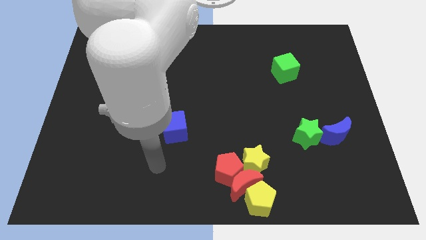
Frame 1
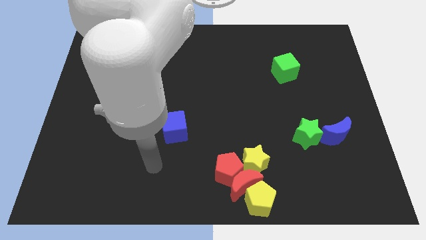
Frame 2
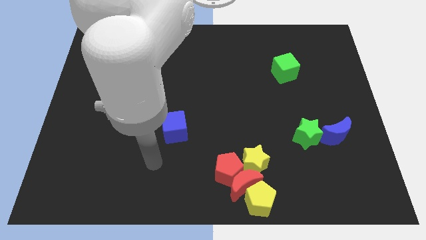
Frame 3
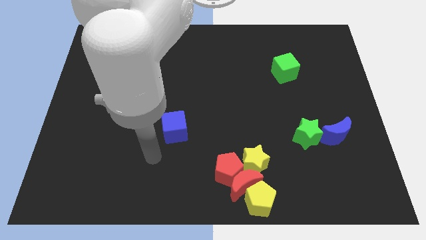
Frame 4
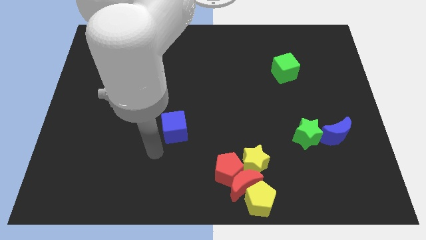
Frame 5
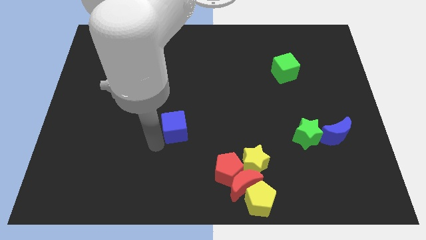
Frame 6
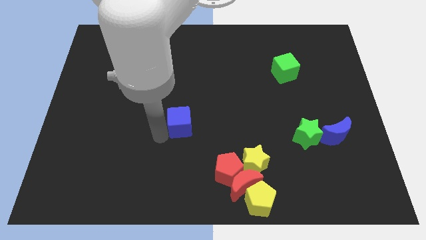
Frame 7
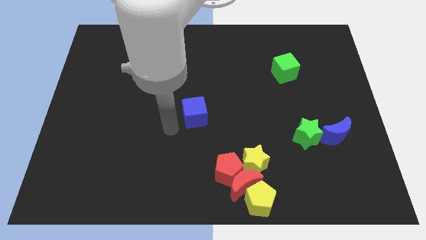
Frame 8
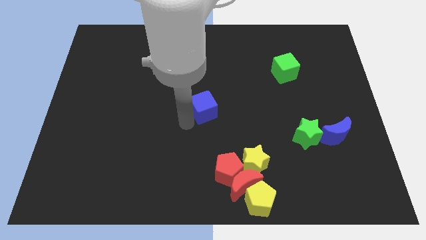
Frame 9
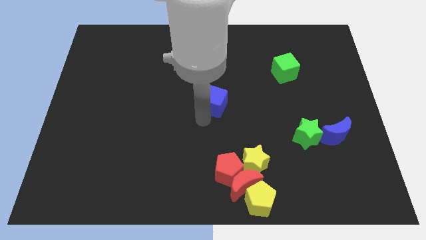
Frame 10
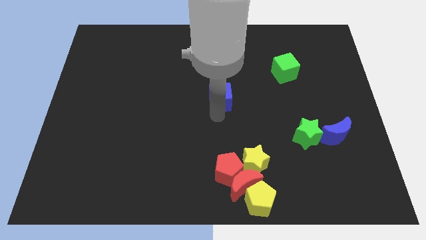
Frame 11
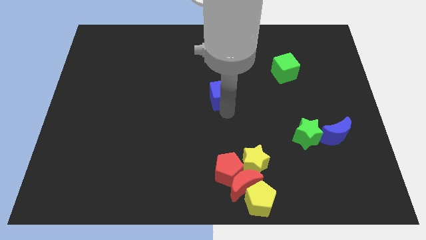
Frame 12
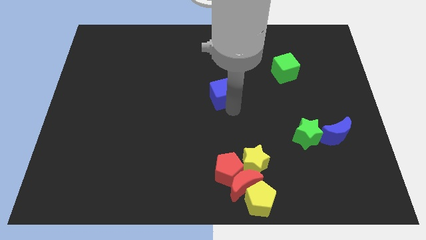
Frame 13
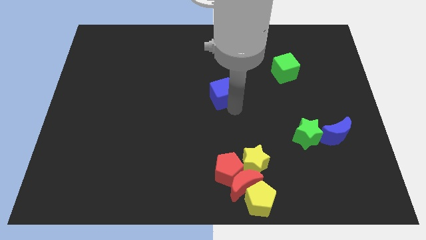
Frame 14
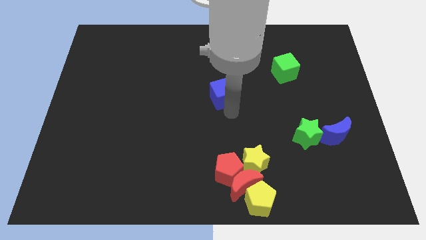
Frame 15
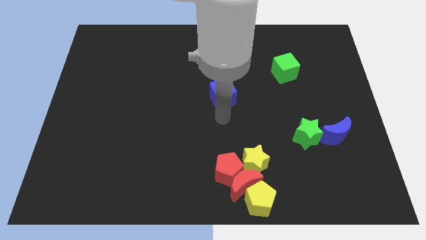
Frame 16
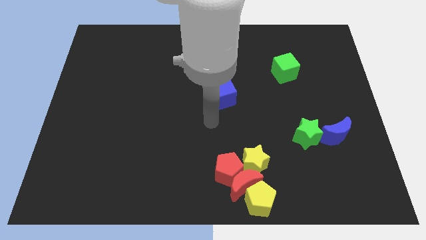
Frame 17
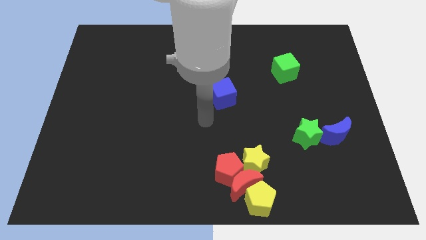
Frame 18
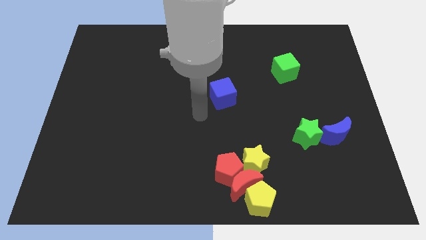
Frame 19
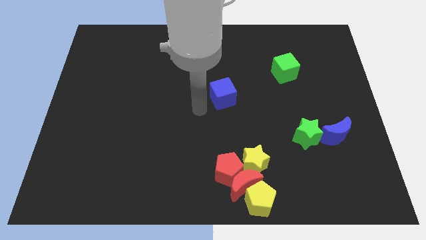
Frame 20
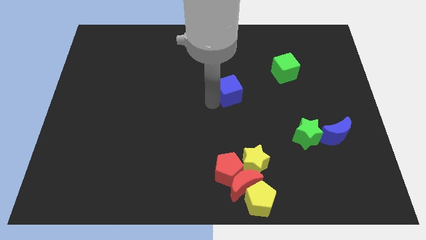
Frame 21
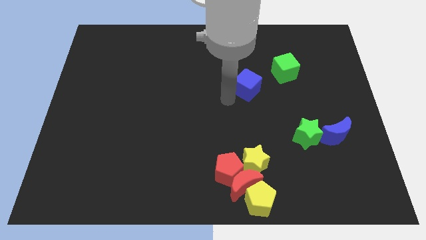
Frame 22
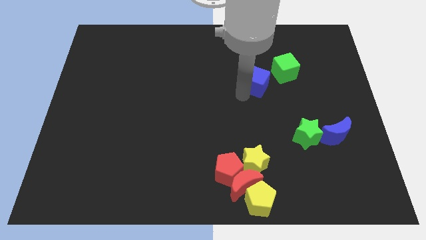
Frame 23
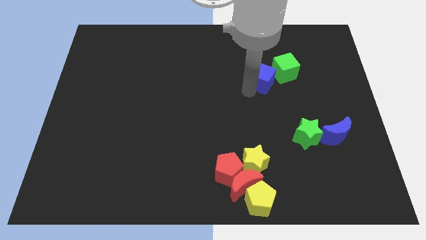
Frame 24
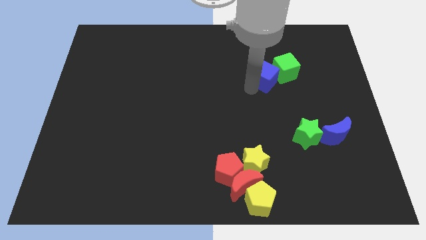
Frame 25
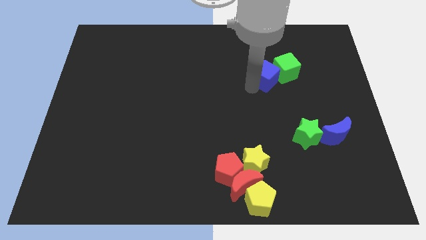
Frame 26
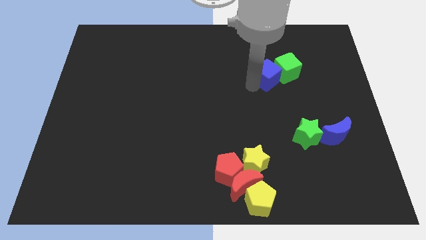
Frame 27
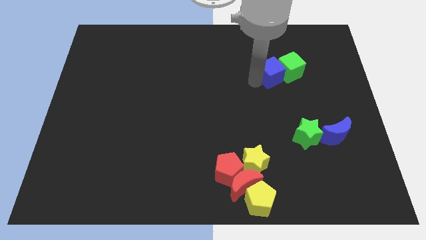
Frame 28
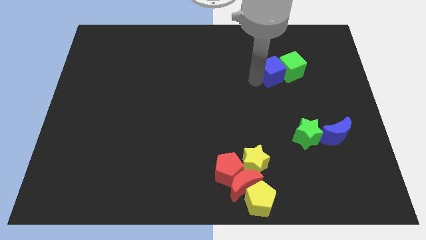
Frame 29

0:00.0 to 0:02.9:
put the blue cube into the green cube

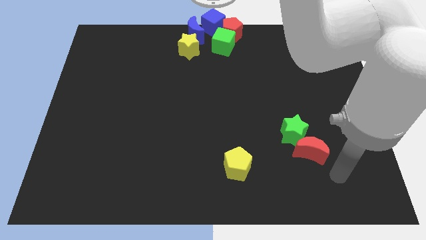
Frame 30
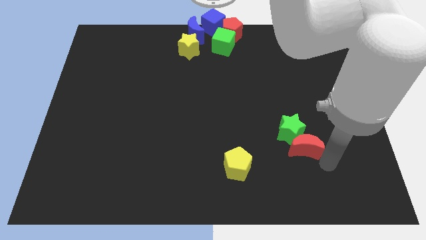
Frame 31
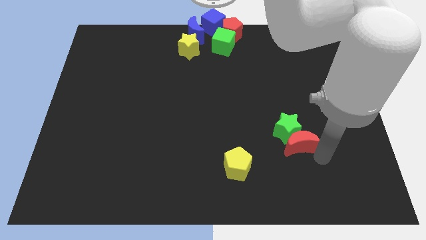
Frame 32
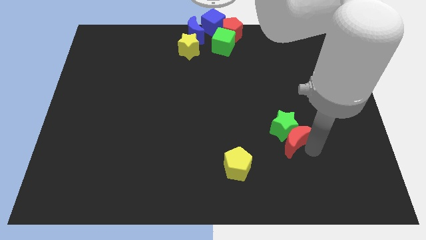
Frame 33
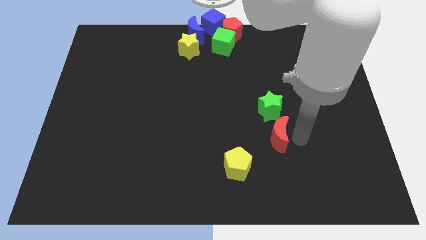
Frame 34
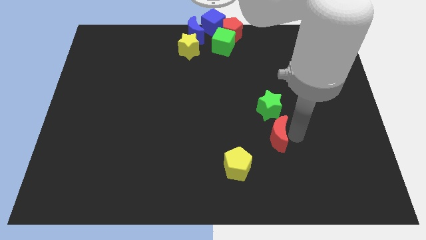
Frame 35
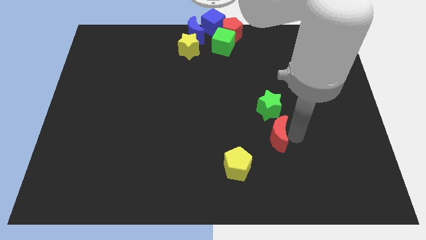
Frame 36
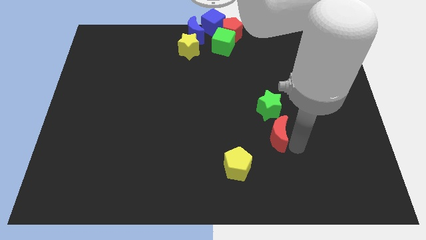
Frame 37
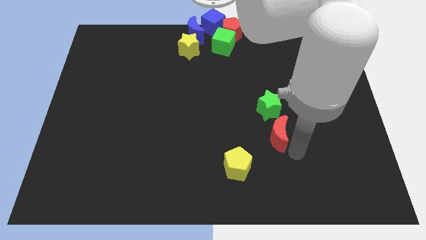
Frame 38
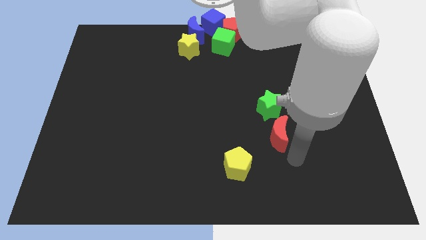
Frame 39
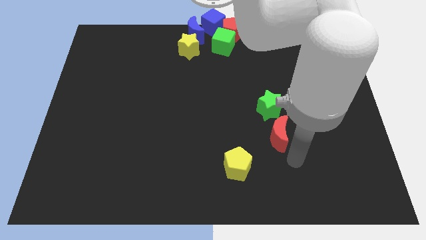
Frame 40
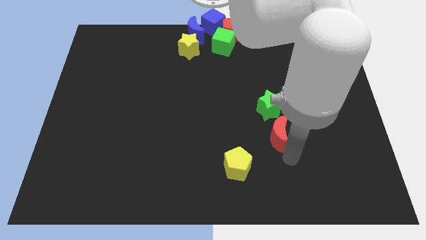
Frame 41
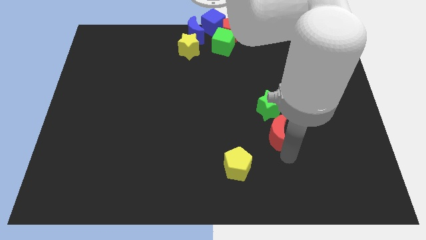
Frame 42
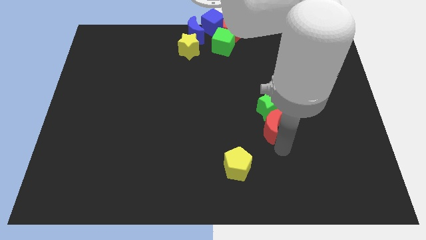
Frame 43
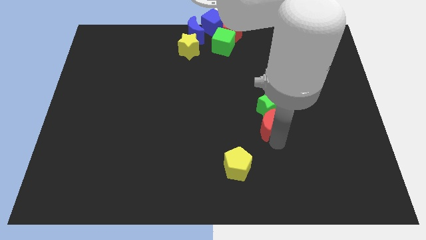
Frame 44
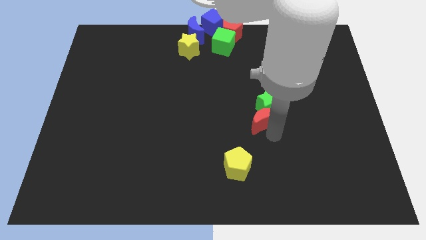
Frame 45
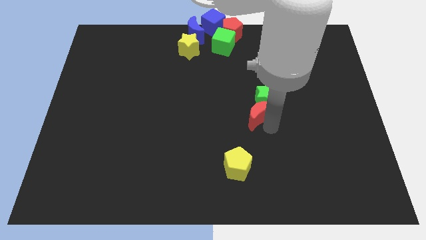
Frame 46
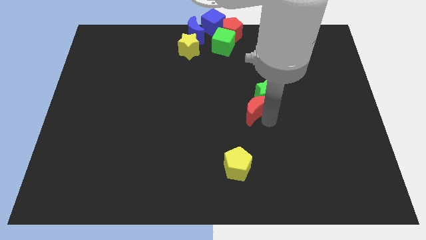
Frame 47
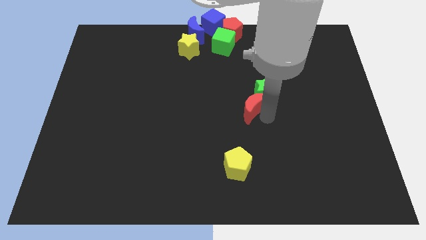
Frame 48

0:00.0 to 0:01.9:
move the red crescent and green star towards center of the board

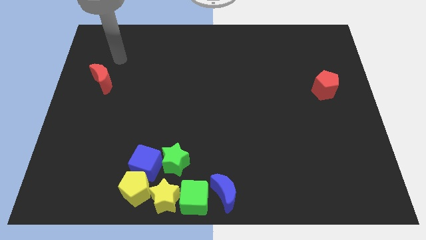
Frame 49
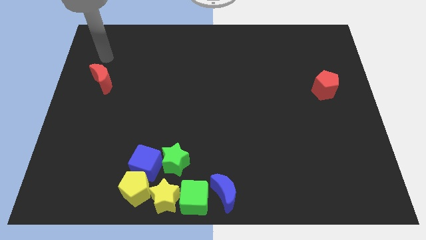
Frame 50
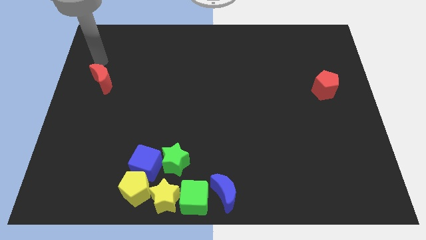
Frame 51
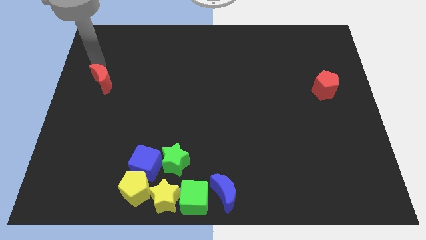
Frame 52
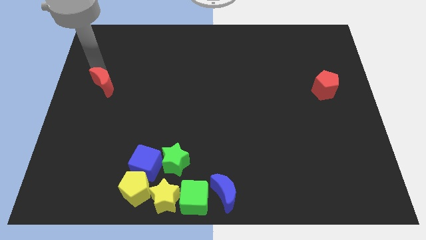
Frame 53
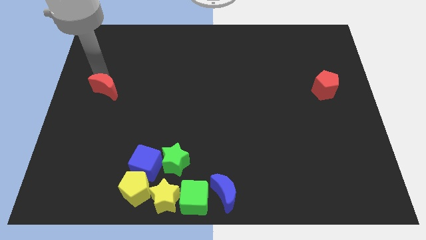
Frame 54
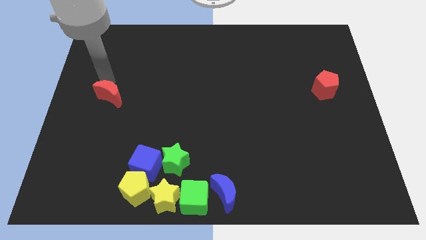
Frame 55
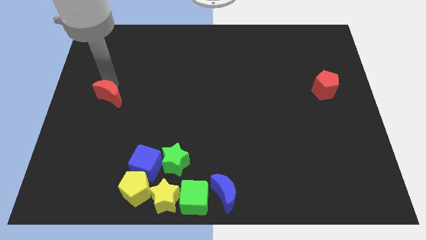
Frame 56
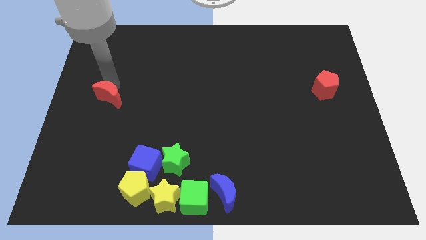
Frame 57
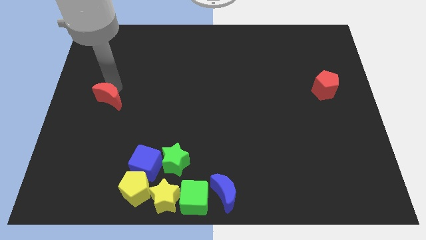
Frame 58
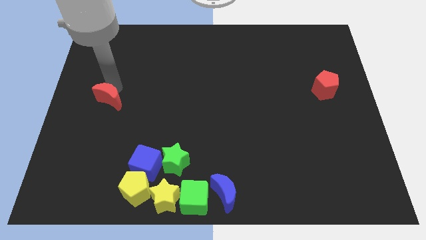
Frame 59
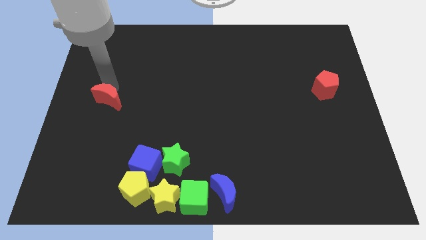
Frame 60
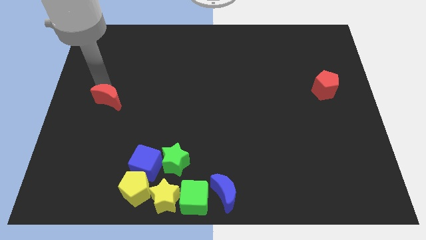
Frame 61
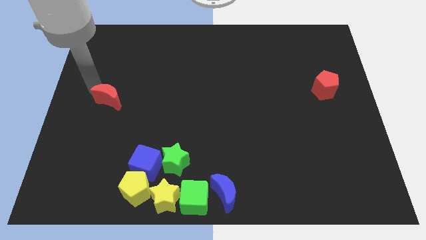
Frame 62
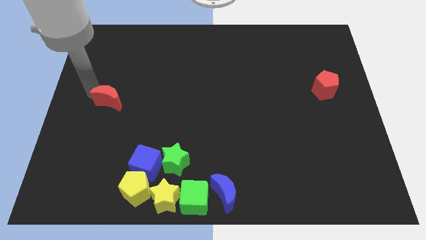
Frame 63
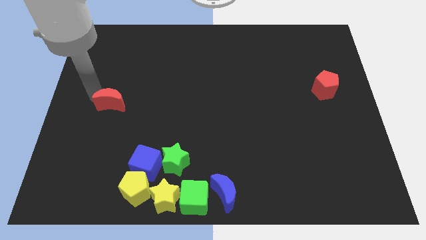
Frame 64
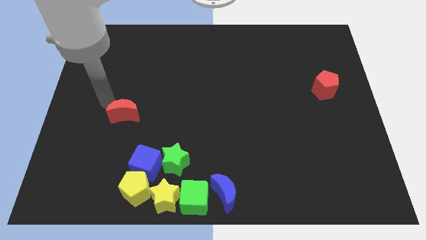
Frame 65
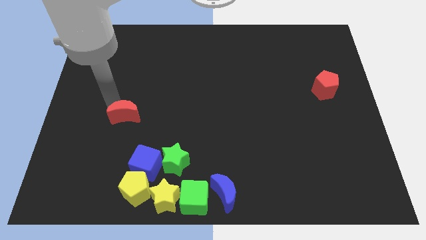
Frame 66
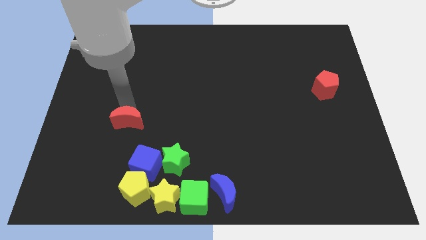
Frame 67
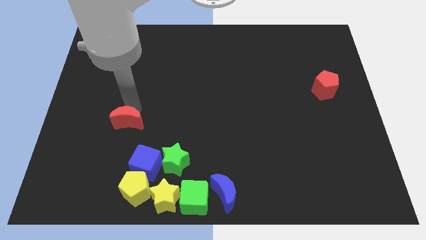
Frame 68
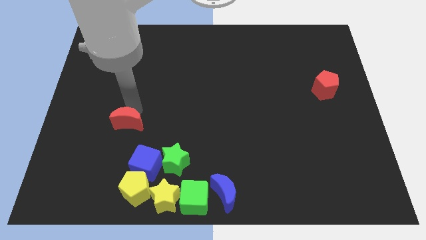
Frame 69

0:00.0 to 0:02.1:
move the red crescent diagonally on the top left side of the blue cube

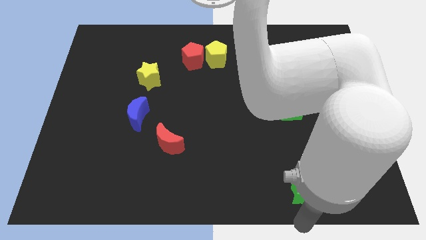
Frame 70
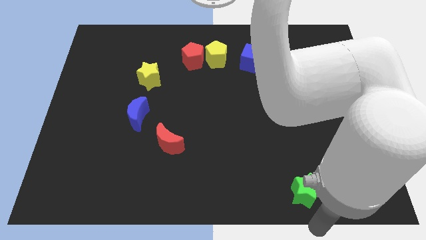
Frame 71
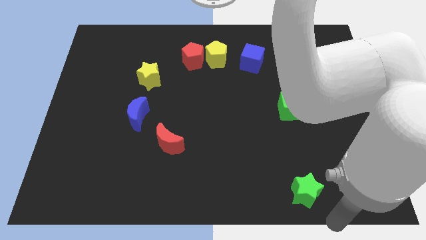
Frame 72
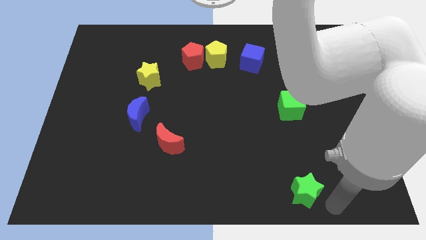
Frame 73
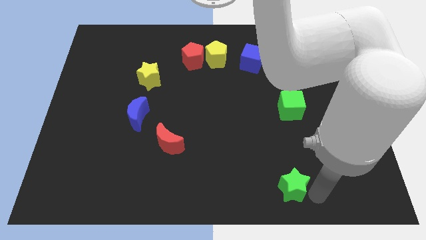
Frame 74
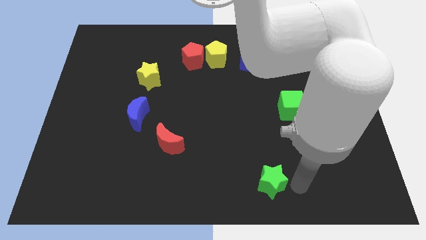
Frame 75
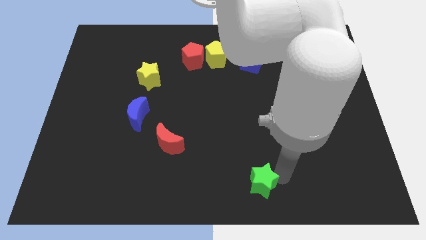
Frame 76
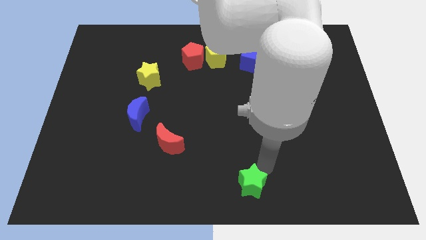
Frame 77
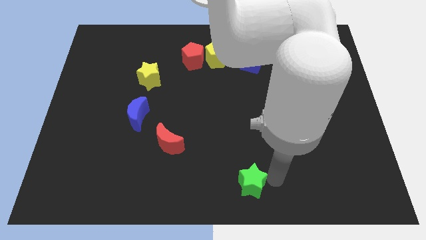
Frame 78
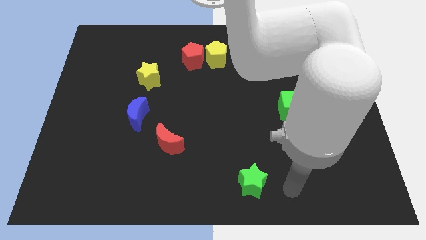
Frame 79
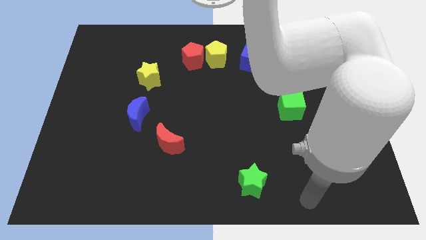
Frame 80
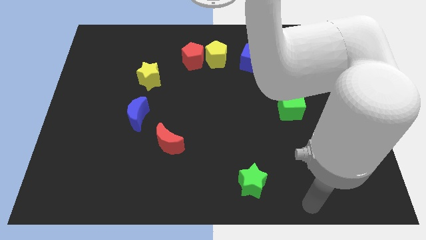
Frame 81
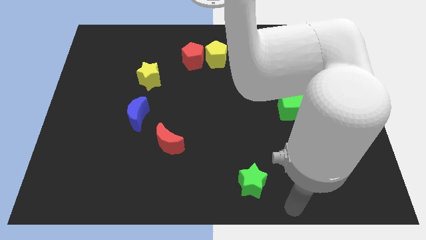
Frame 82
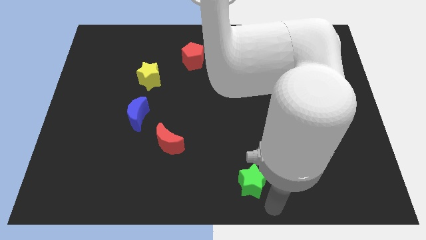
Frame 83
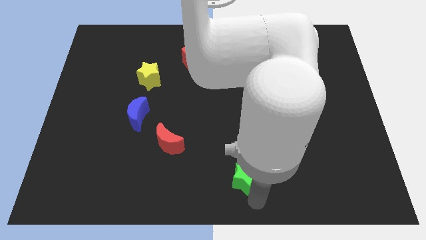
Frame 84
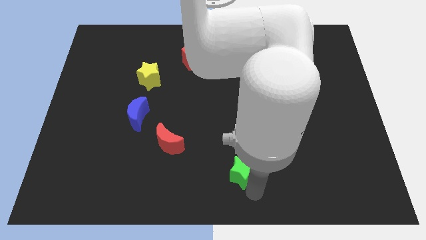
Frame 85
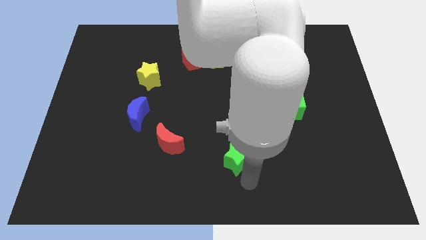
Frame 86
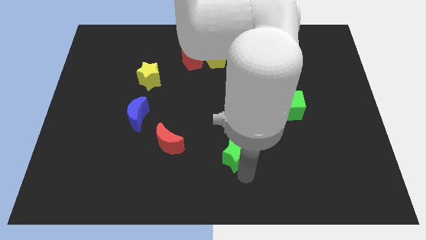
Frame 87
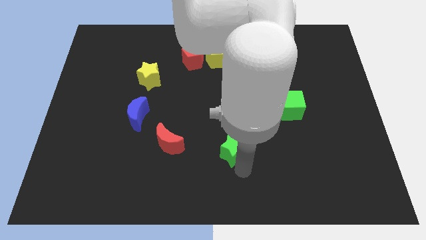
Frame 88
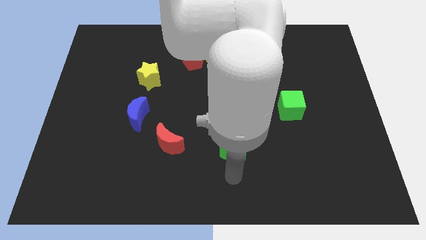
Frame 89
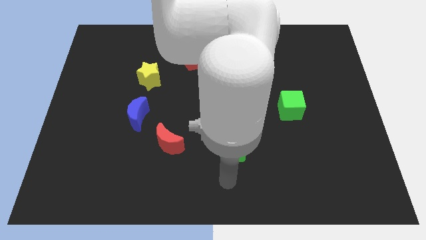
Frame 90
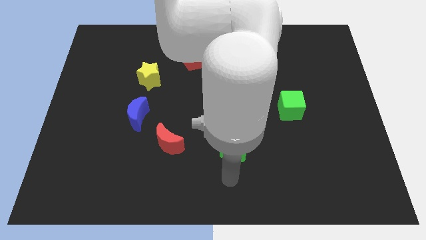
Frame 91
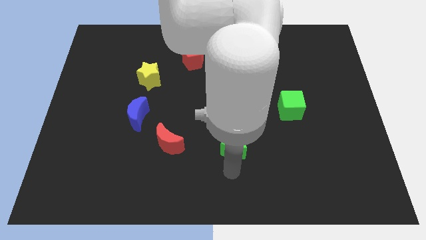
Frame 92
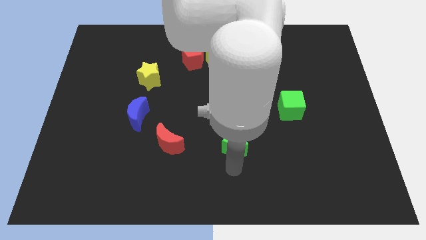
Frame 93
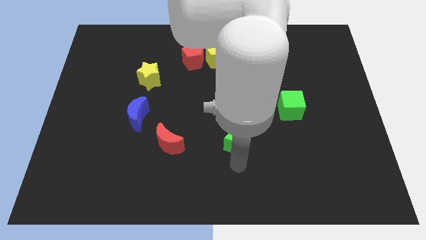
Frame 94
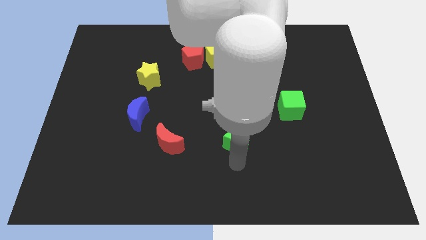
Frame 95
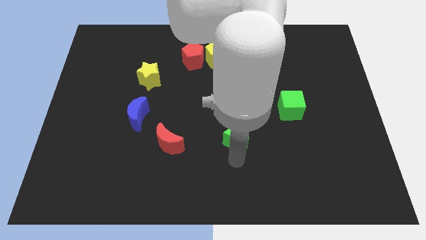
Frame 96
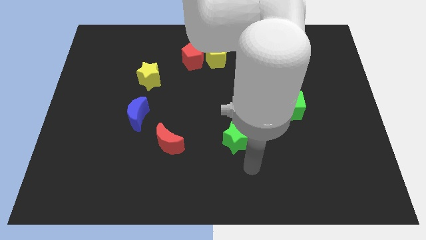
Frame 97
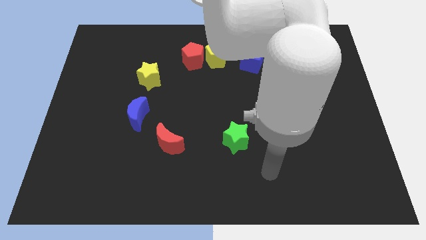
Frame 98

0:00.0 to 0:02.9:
place the green star to the right side of red moon
